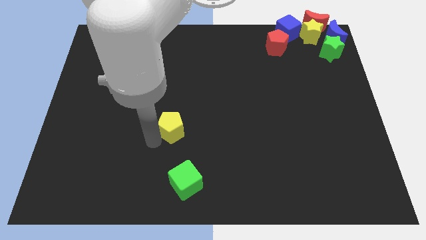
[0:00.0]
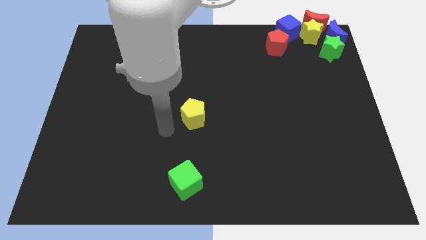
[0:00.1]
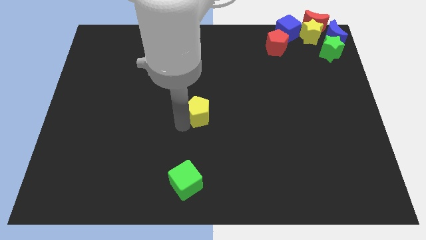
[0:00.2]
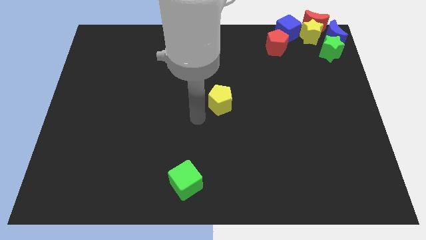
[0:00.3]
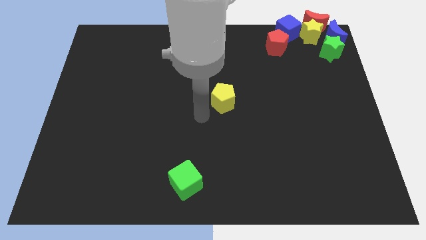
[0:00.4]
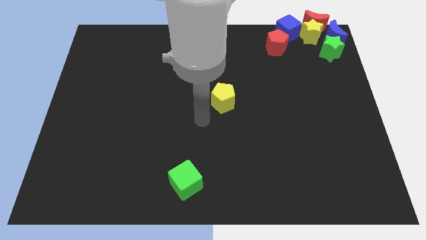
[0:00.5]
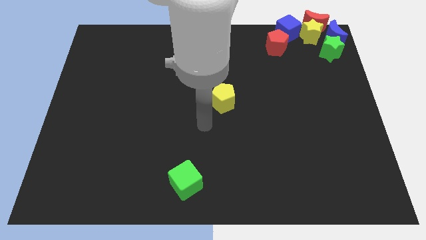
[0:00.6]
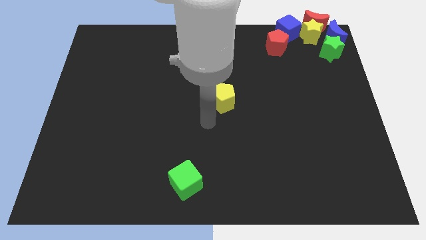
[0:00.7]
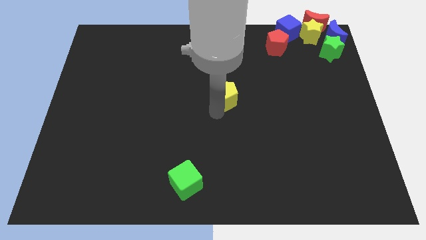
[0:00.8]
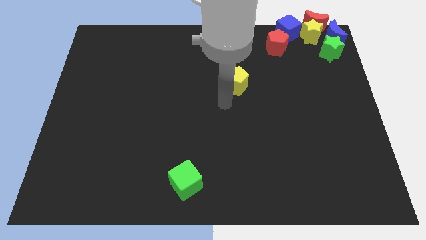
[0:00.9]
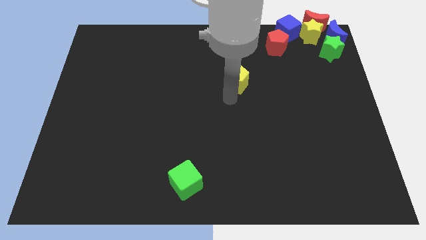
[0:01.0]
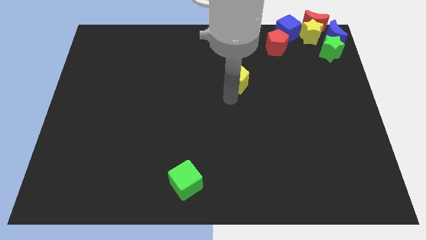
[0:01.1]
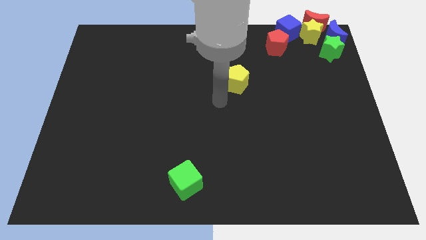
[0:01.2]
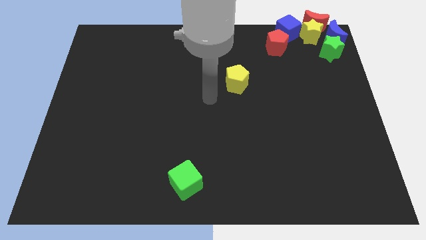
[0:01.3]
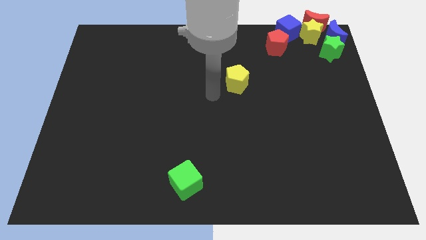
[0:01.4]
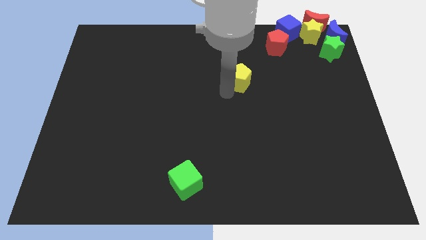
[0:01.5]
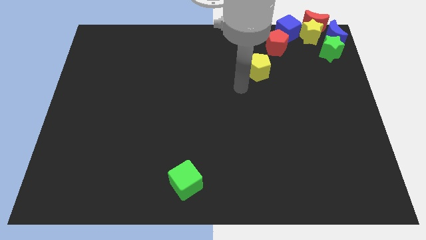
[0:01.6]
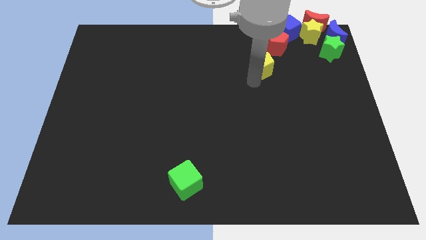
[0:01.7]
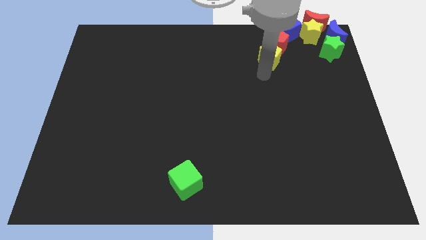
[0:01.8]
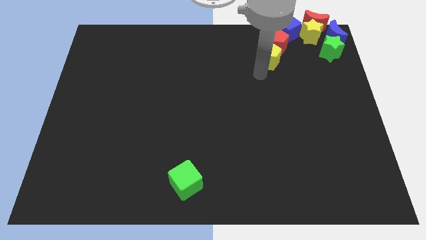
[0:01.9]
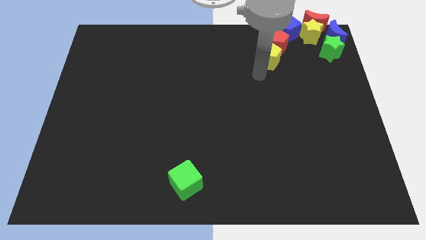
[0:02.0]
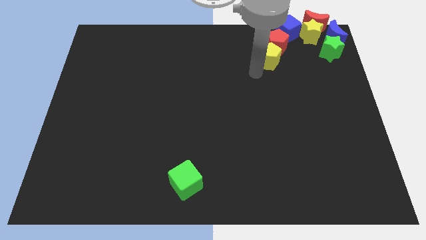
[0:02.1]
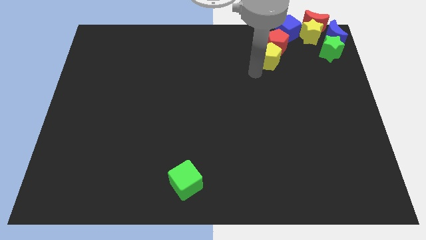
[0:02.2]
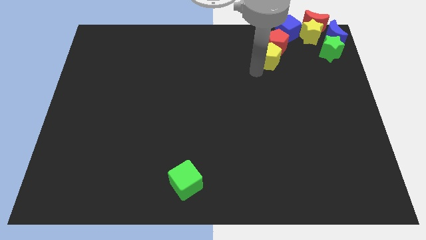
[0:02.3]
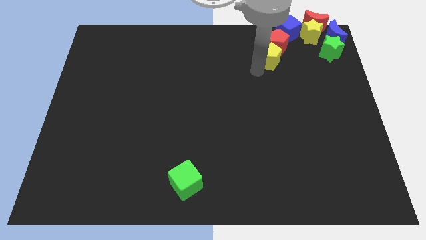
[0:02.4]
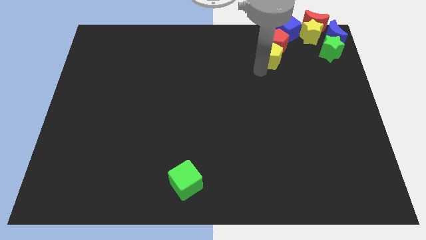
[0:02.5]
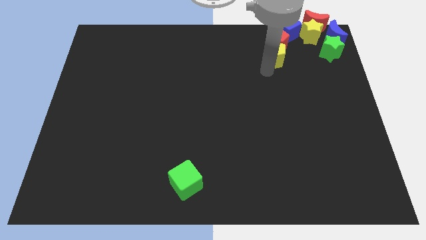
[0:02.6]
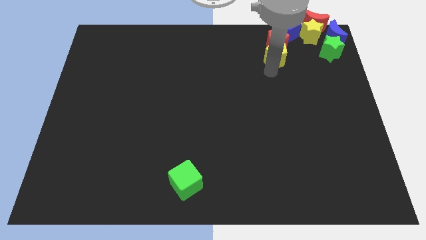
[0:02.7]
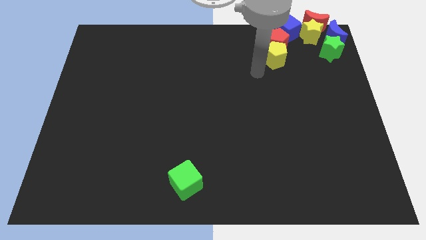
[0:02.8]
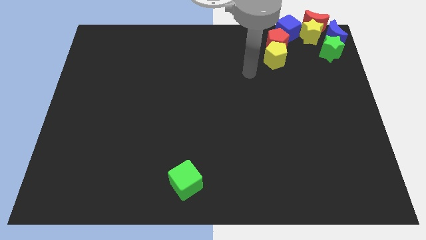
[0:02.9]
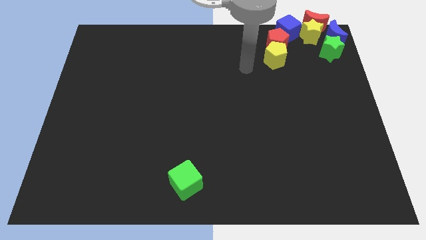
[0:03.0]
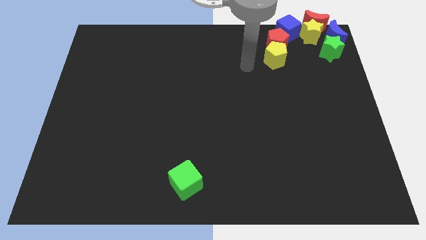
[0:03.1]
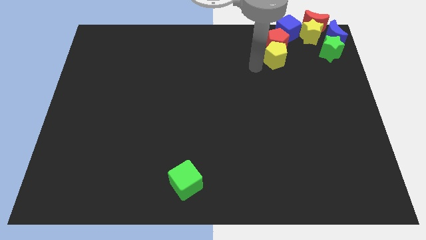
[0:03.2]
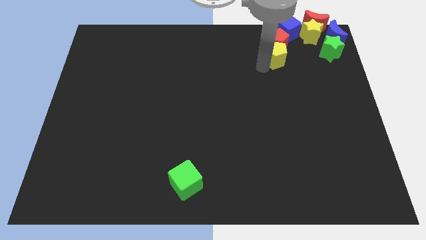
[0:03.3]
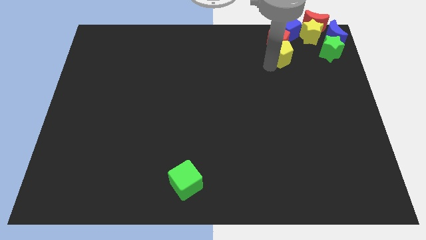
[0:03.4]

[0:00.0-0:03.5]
move yellow pentagon towards red pentagon

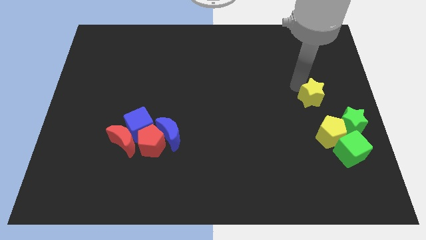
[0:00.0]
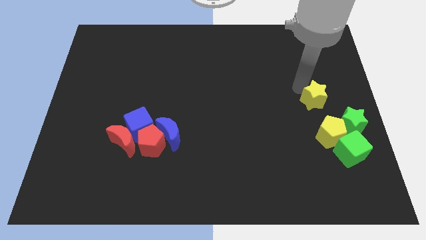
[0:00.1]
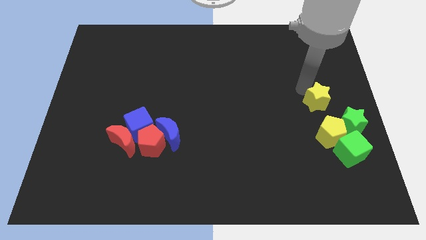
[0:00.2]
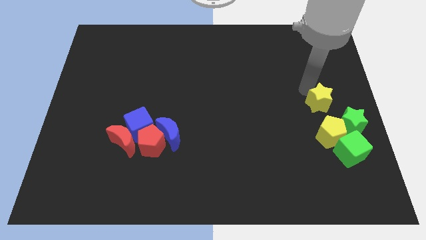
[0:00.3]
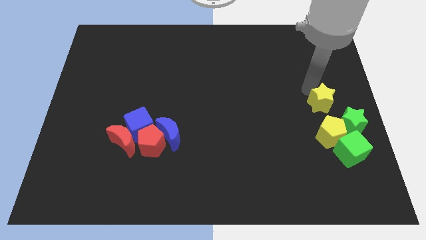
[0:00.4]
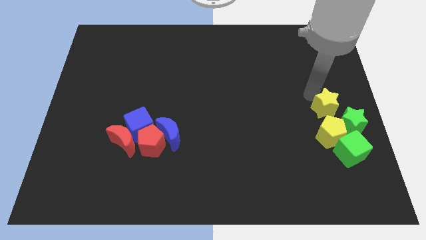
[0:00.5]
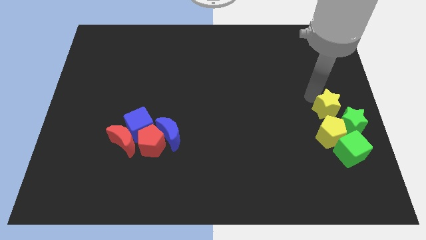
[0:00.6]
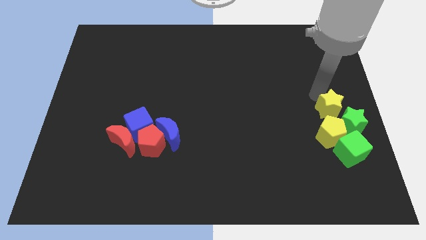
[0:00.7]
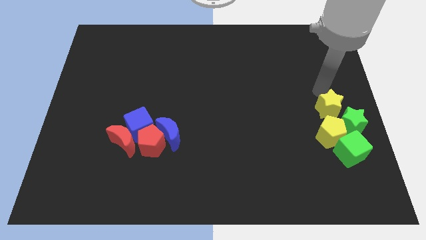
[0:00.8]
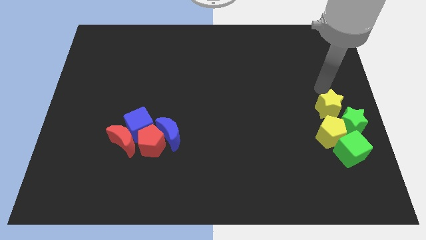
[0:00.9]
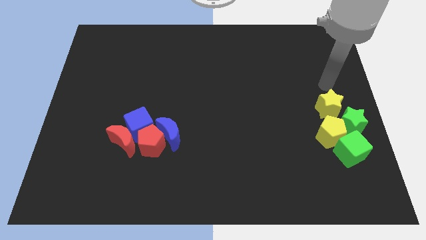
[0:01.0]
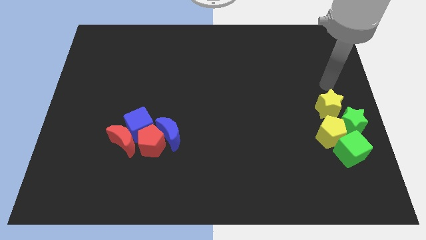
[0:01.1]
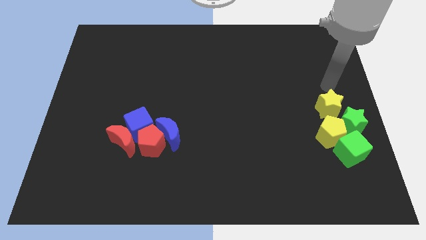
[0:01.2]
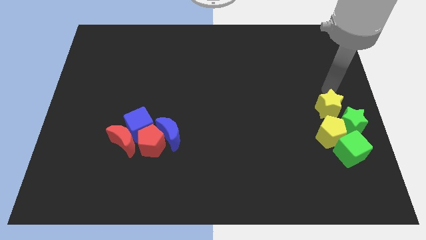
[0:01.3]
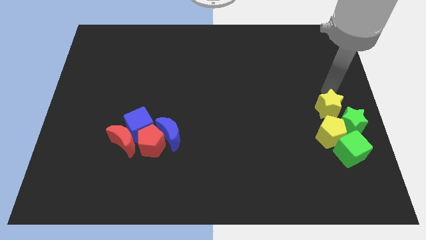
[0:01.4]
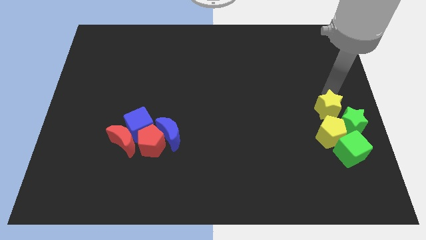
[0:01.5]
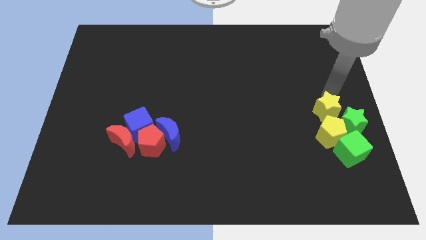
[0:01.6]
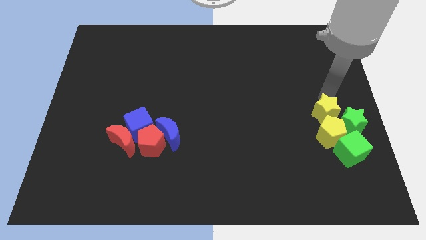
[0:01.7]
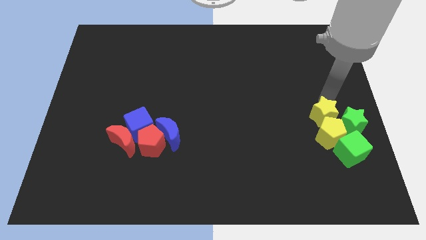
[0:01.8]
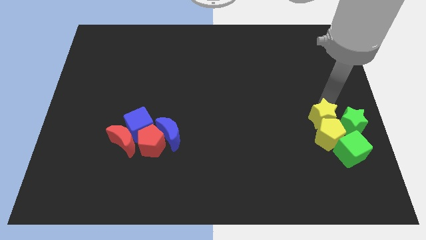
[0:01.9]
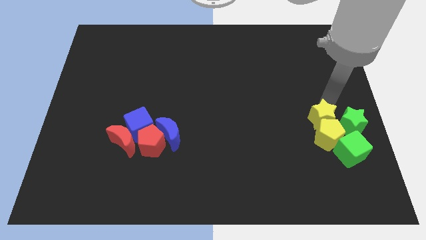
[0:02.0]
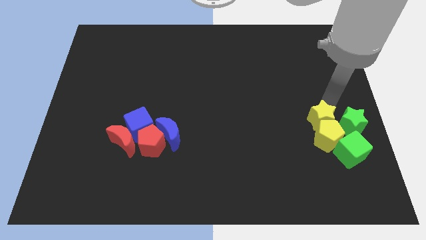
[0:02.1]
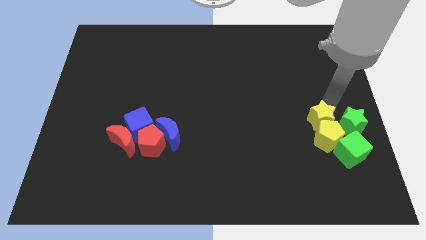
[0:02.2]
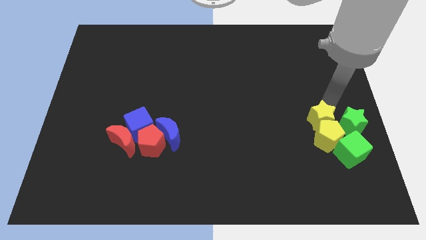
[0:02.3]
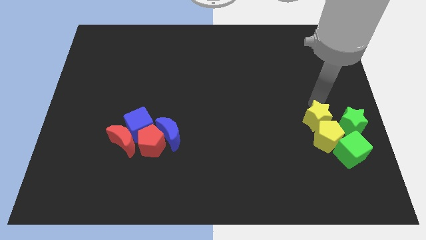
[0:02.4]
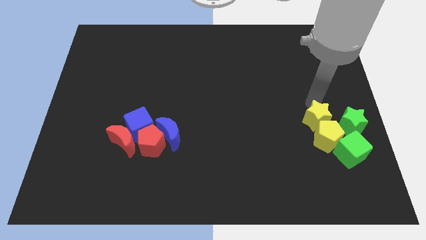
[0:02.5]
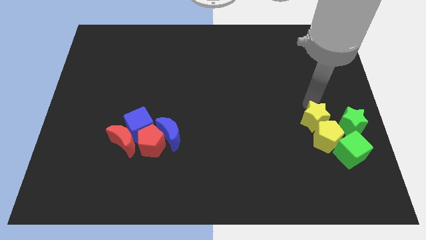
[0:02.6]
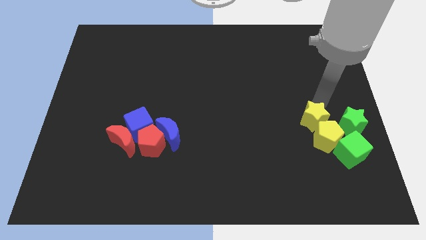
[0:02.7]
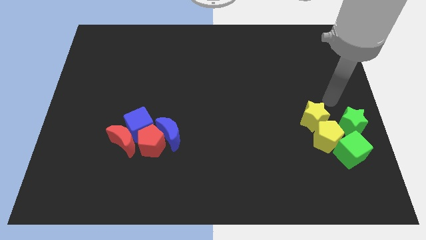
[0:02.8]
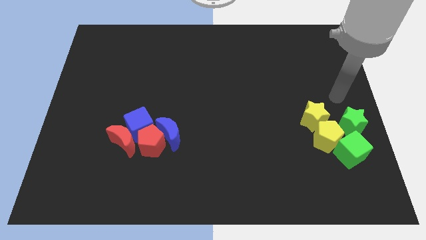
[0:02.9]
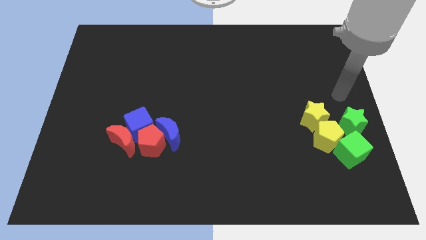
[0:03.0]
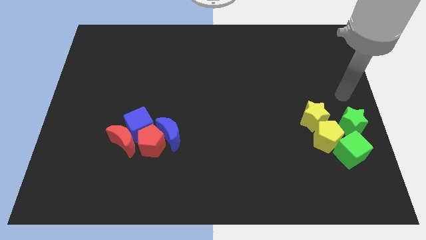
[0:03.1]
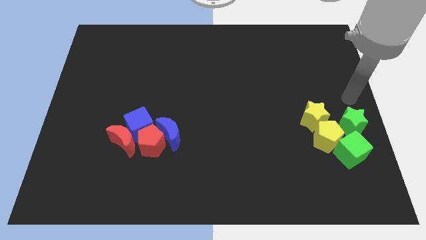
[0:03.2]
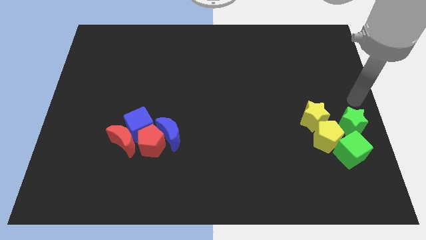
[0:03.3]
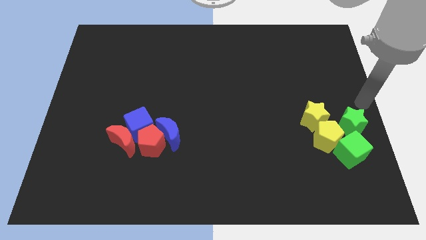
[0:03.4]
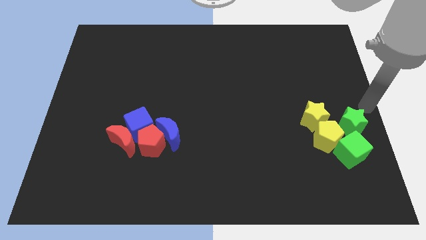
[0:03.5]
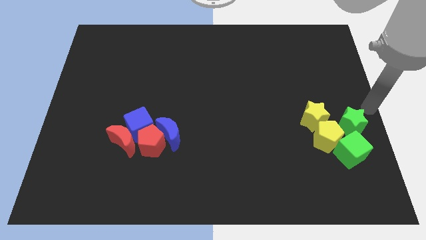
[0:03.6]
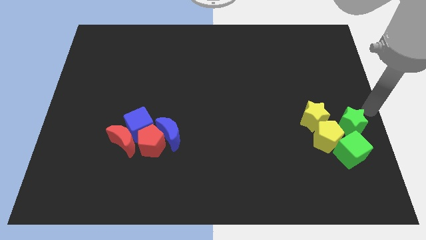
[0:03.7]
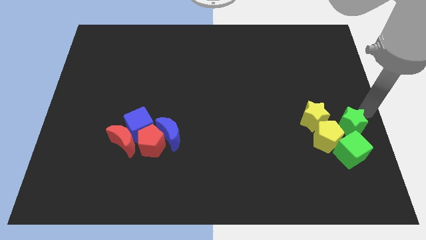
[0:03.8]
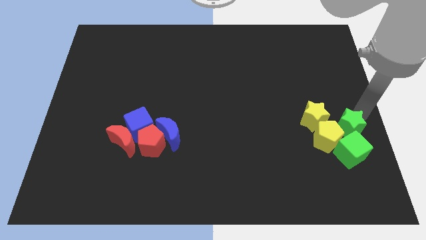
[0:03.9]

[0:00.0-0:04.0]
push the yellow and green blocks together to form a group on the center right of the board

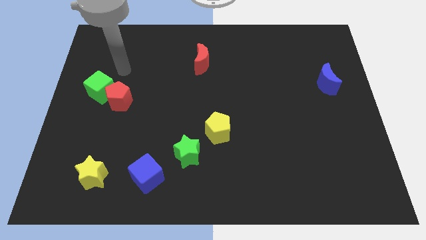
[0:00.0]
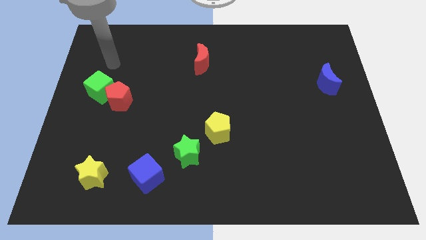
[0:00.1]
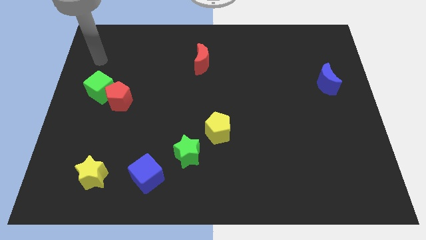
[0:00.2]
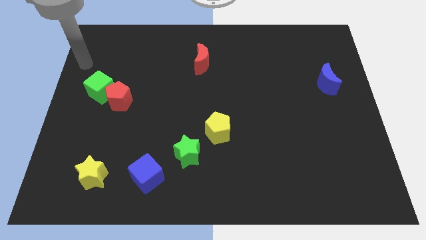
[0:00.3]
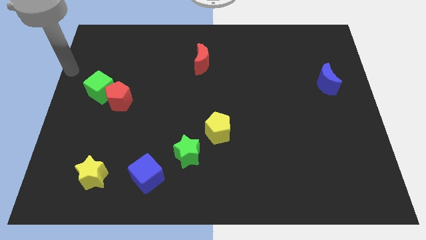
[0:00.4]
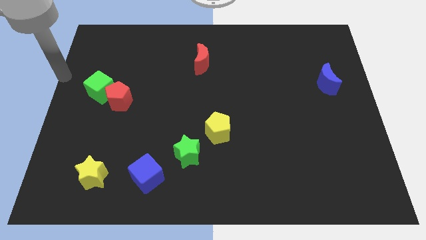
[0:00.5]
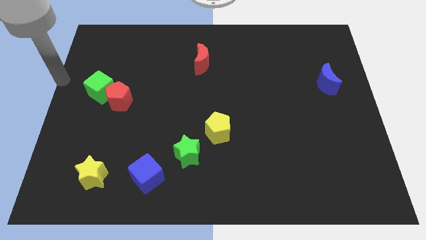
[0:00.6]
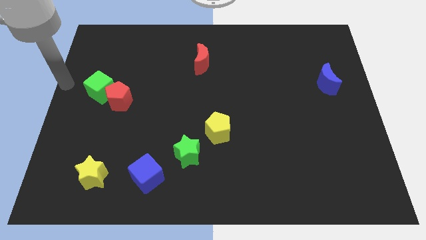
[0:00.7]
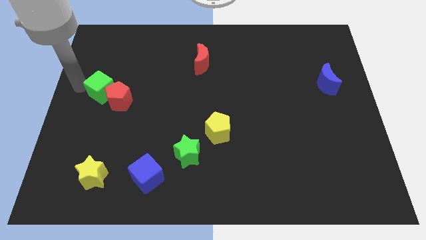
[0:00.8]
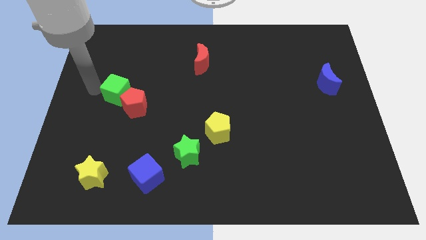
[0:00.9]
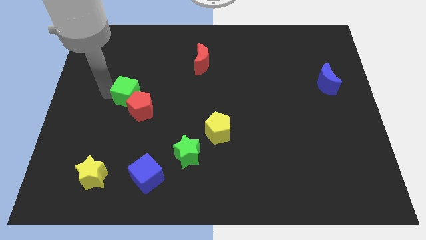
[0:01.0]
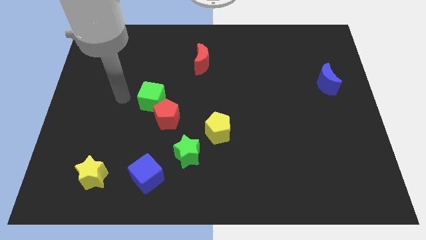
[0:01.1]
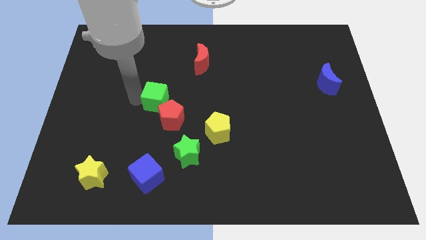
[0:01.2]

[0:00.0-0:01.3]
place the red and green blocks above the blue cube

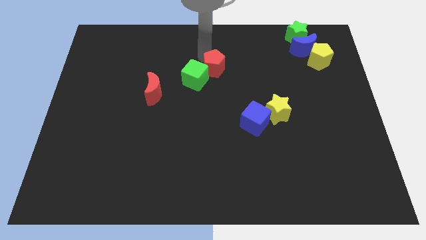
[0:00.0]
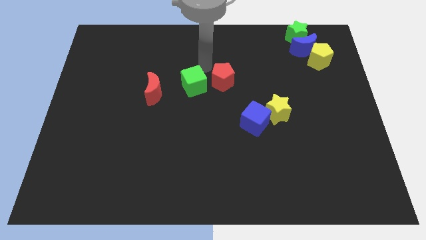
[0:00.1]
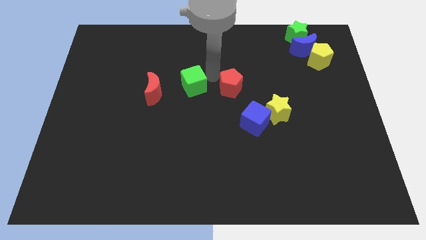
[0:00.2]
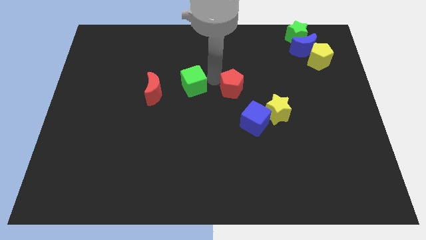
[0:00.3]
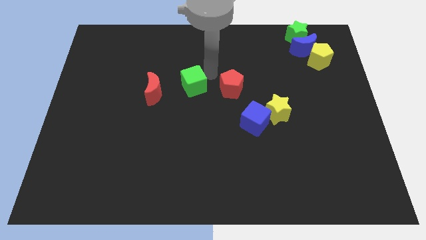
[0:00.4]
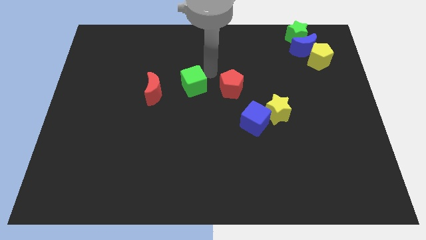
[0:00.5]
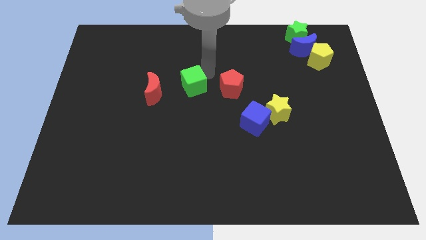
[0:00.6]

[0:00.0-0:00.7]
separate the red pentagon from the green cube slightly towards bottom
